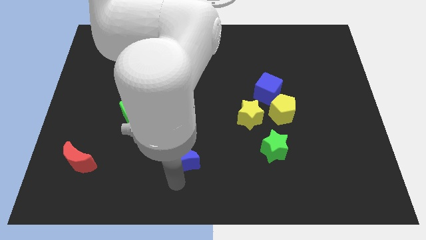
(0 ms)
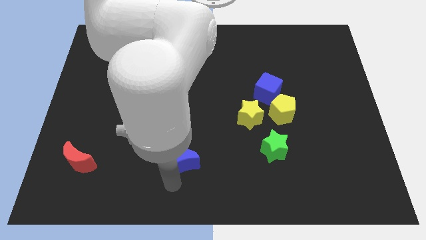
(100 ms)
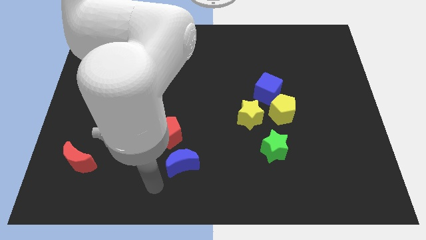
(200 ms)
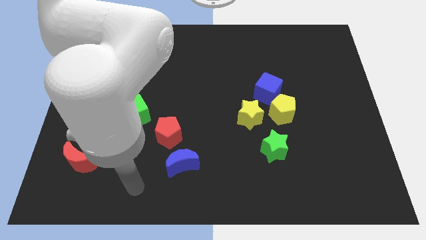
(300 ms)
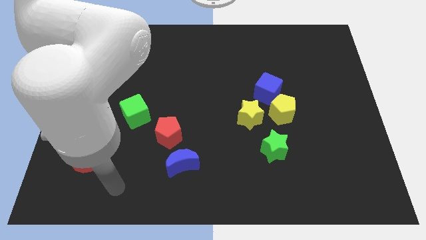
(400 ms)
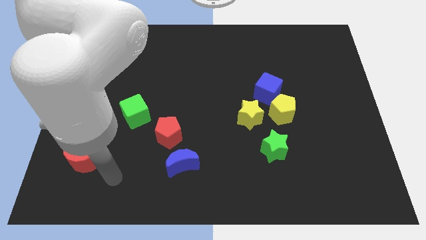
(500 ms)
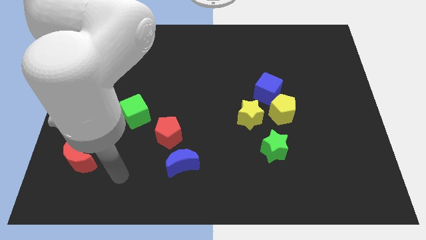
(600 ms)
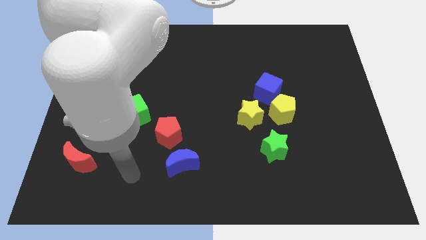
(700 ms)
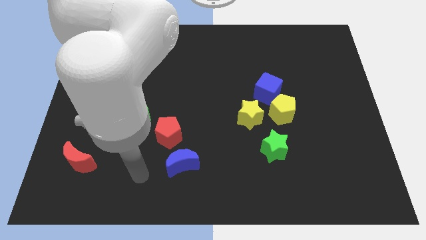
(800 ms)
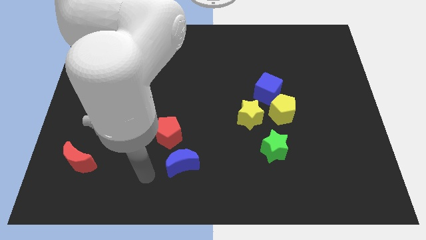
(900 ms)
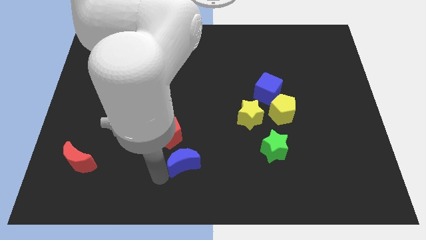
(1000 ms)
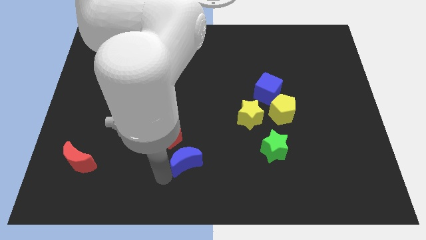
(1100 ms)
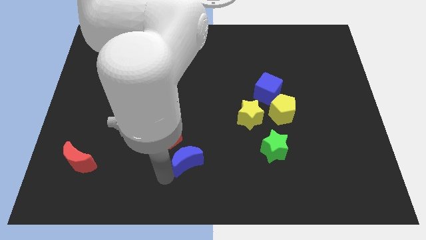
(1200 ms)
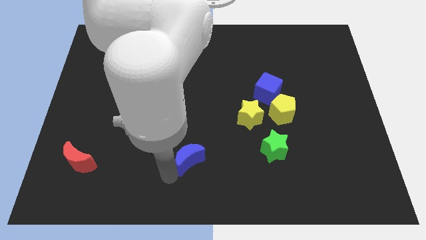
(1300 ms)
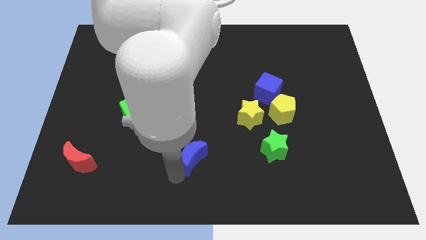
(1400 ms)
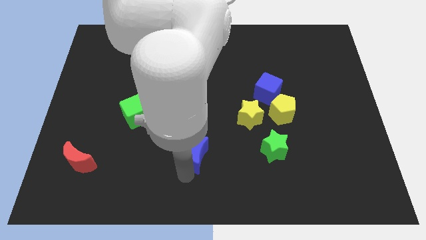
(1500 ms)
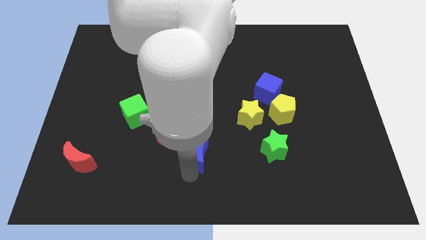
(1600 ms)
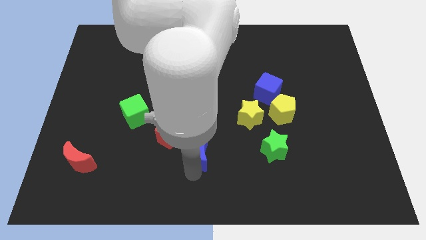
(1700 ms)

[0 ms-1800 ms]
slightly push the blue crescent to the right of the board

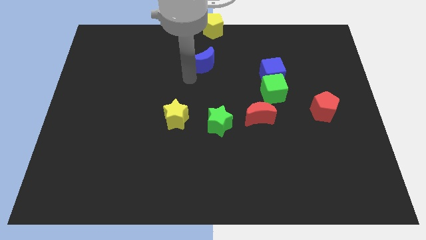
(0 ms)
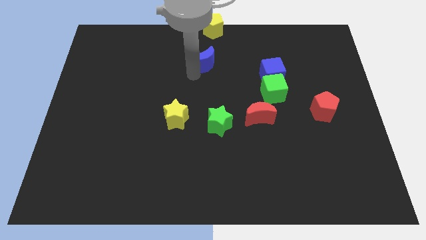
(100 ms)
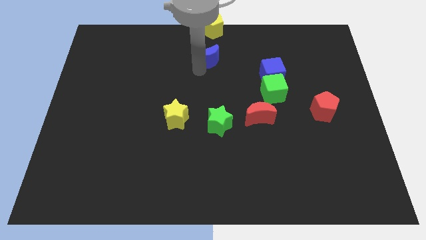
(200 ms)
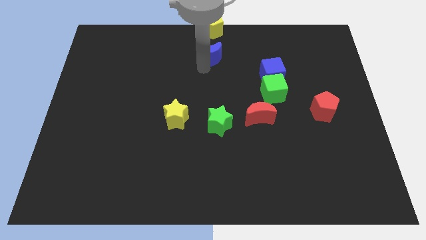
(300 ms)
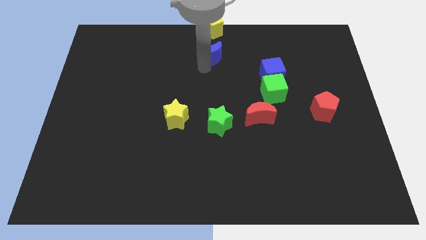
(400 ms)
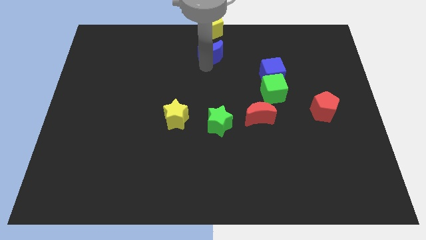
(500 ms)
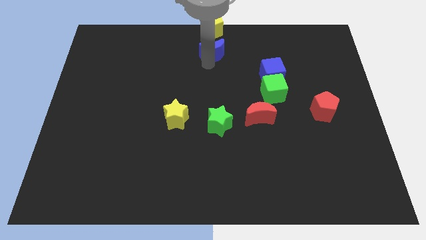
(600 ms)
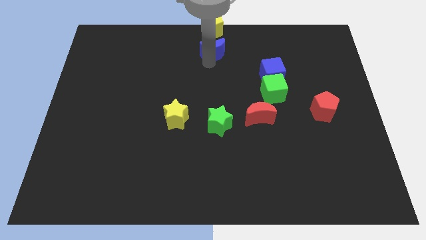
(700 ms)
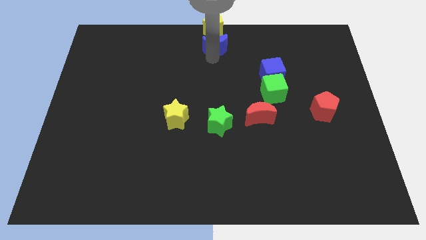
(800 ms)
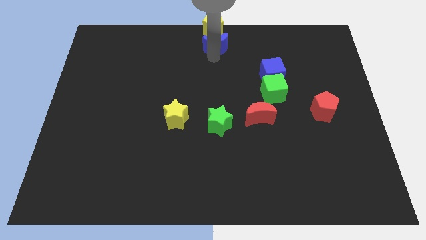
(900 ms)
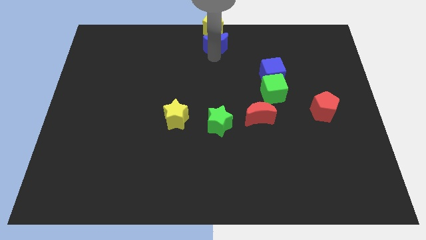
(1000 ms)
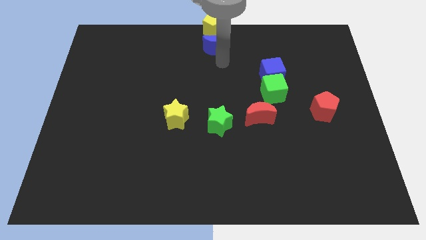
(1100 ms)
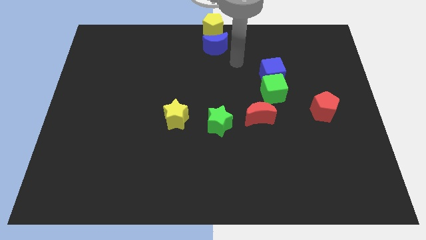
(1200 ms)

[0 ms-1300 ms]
move the blue crescent towards the bottom of the yellow pentagon

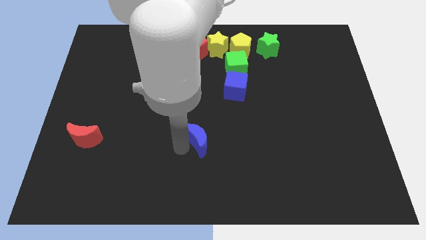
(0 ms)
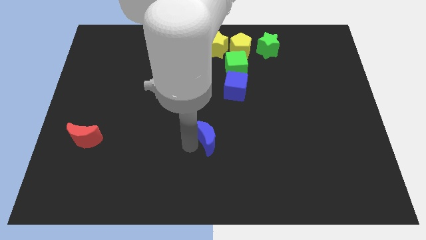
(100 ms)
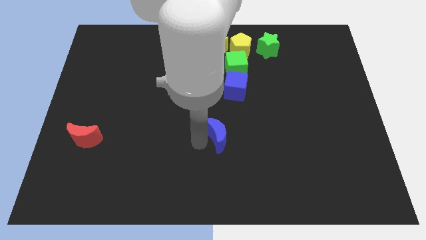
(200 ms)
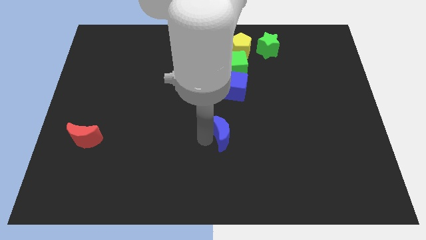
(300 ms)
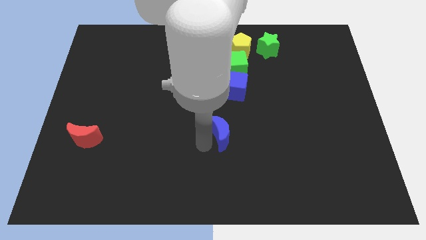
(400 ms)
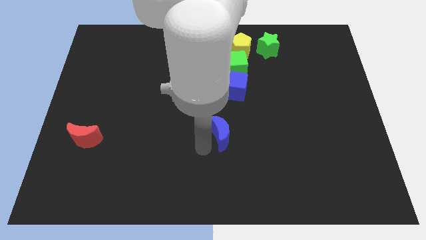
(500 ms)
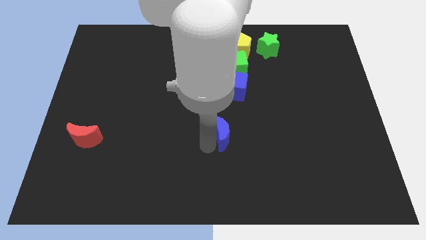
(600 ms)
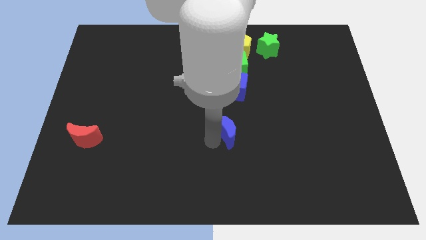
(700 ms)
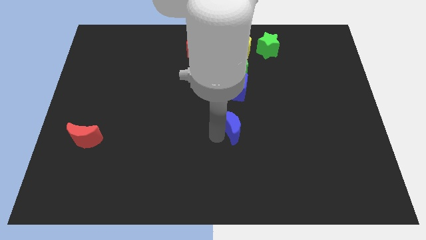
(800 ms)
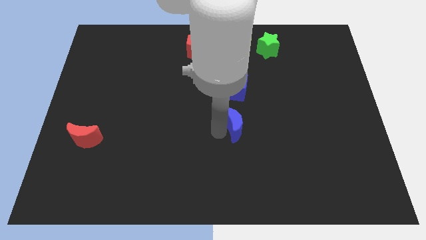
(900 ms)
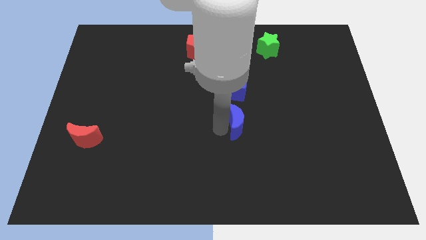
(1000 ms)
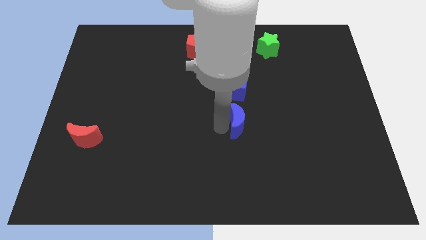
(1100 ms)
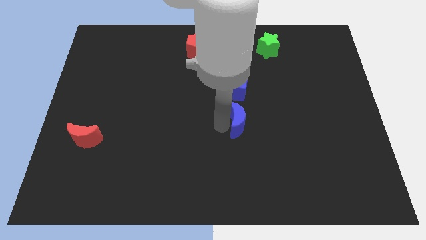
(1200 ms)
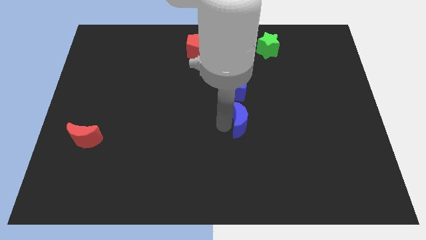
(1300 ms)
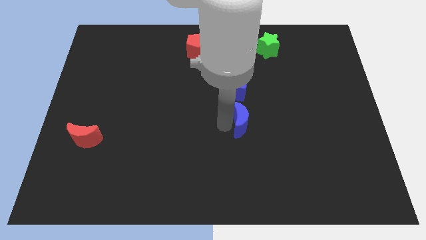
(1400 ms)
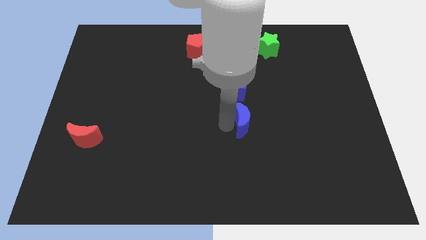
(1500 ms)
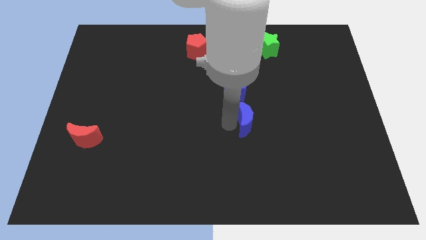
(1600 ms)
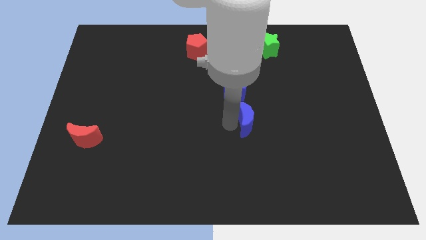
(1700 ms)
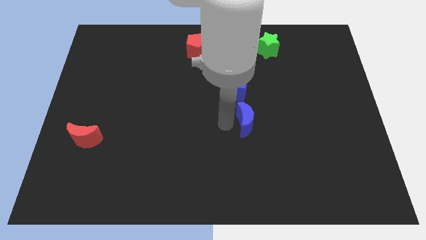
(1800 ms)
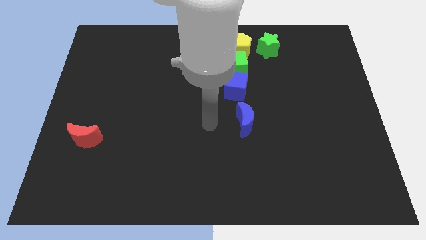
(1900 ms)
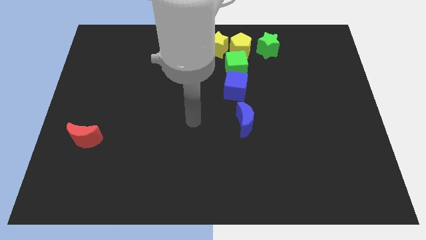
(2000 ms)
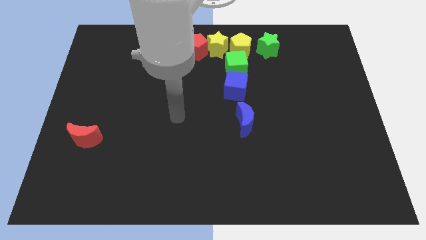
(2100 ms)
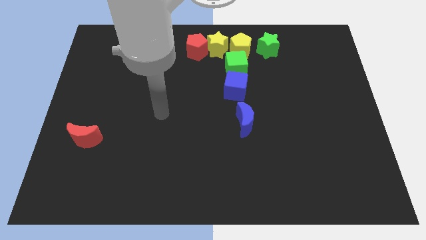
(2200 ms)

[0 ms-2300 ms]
move the blue crescent in line with the blue cube

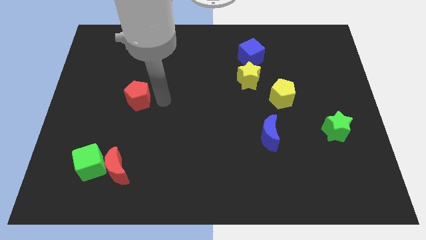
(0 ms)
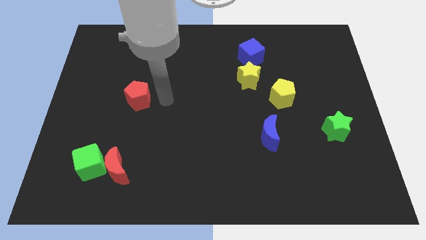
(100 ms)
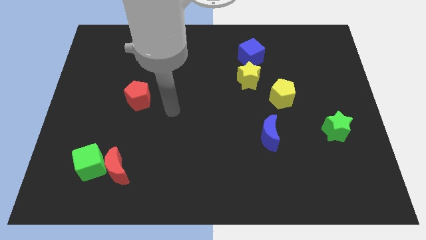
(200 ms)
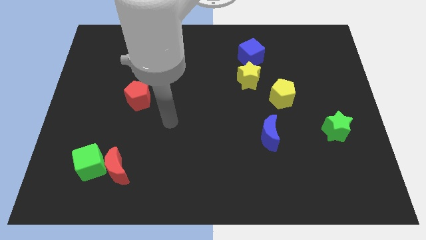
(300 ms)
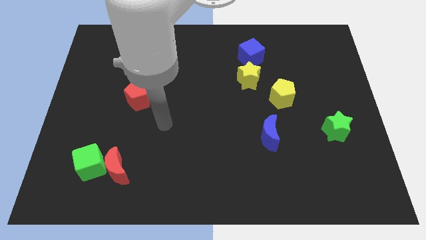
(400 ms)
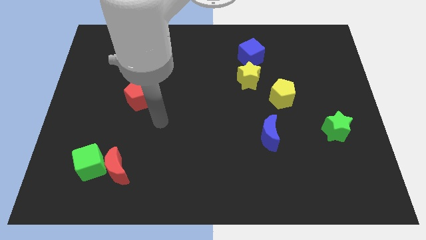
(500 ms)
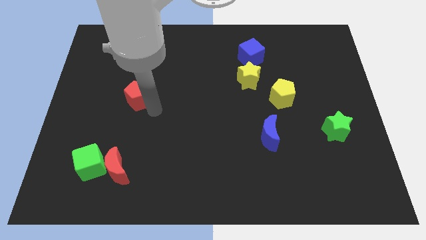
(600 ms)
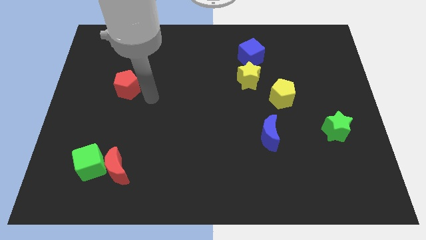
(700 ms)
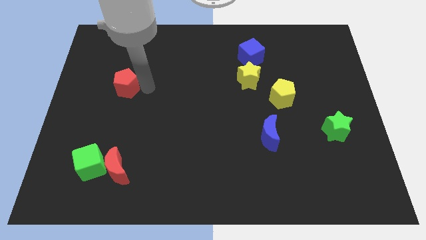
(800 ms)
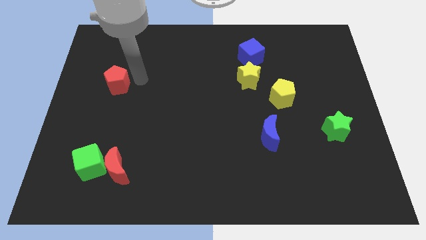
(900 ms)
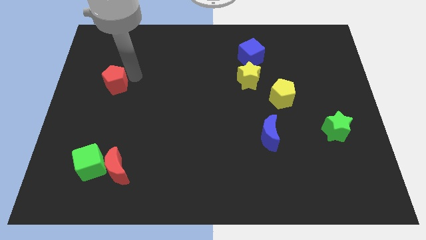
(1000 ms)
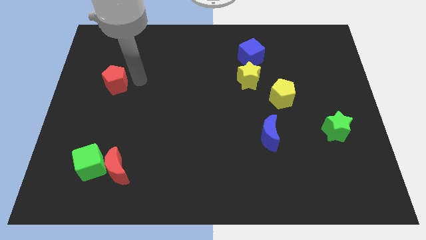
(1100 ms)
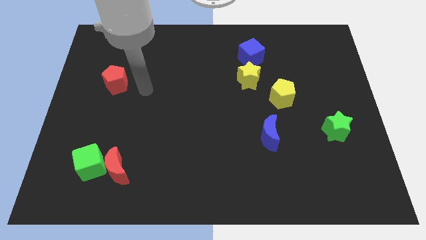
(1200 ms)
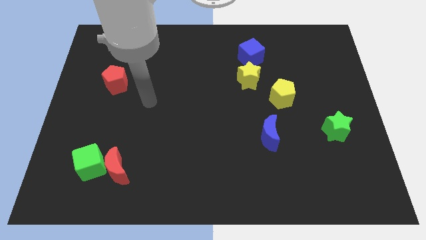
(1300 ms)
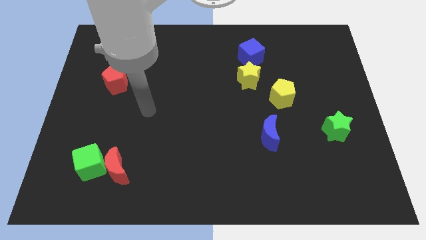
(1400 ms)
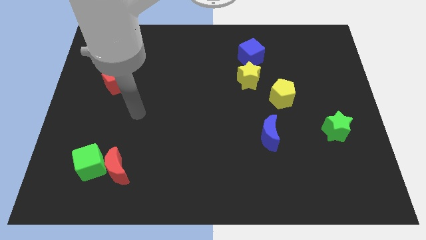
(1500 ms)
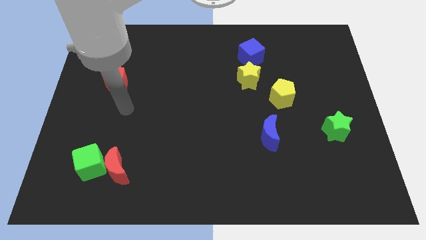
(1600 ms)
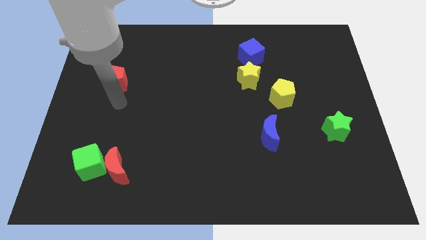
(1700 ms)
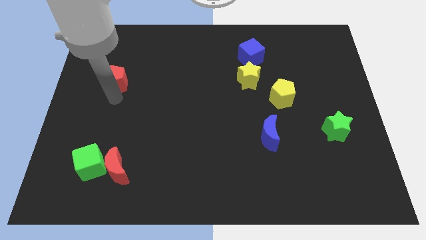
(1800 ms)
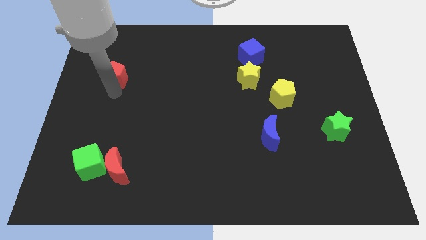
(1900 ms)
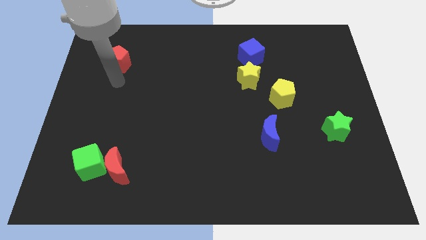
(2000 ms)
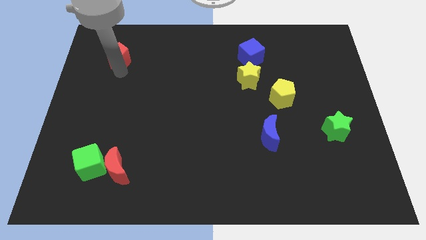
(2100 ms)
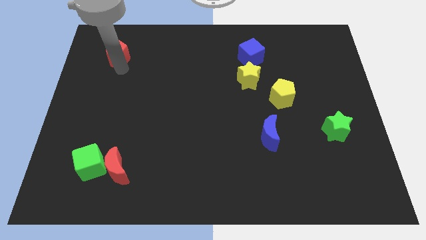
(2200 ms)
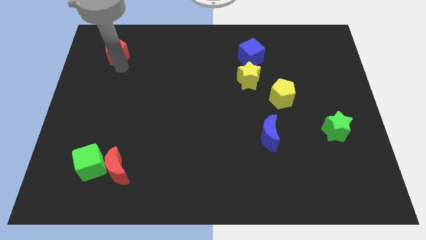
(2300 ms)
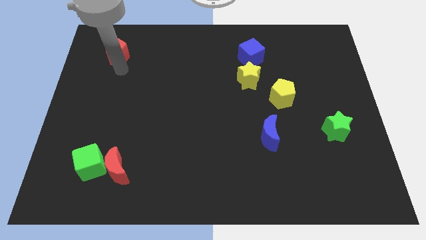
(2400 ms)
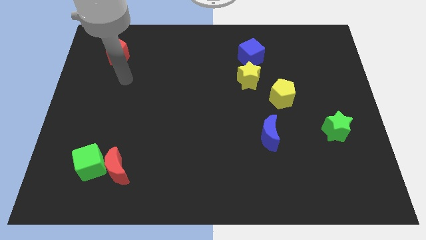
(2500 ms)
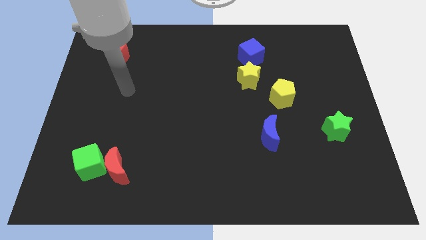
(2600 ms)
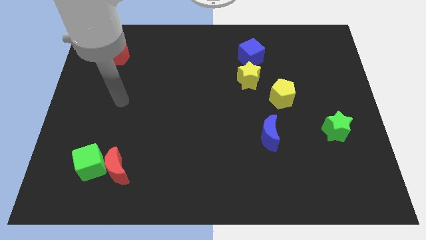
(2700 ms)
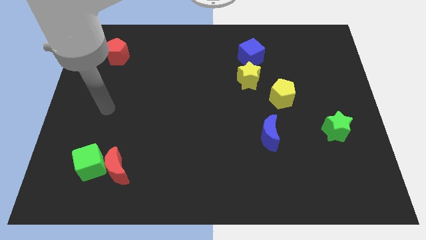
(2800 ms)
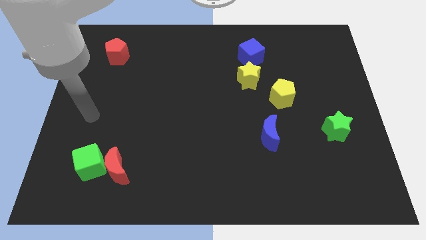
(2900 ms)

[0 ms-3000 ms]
move the red pentagon to the horizontal left side of the blue cube

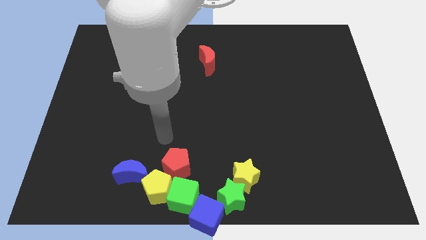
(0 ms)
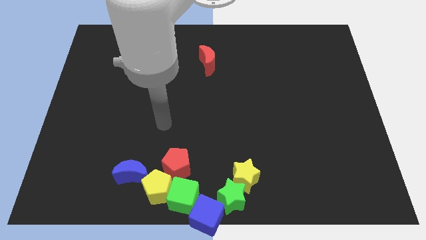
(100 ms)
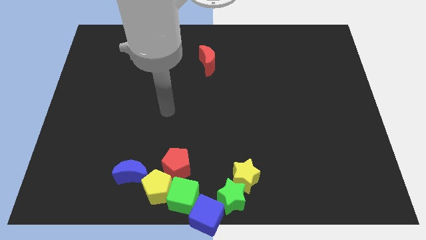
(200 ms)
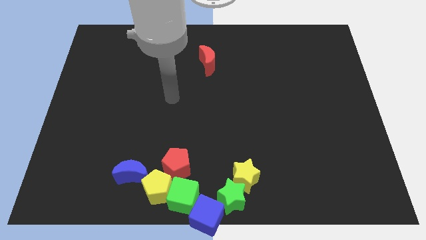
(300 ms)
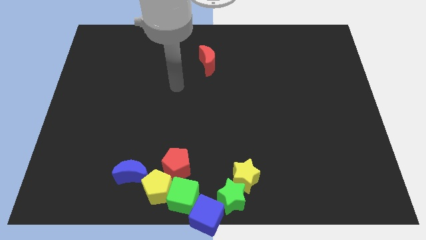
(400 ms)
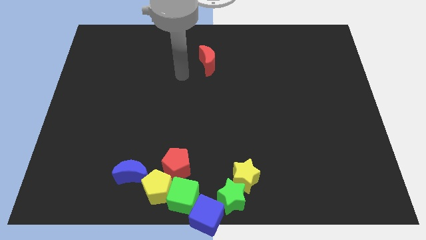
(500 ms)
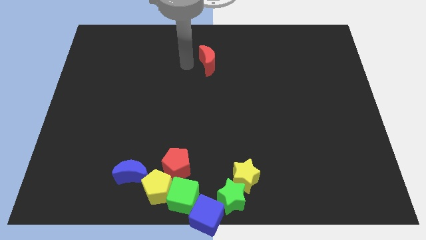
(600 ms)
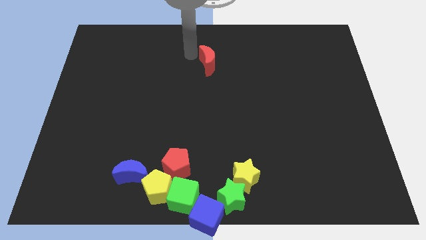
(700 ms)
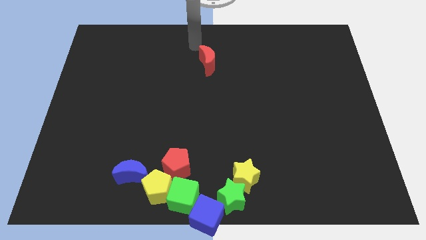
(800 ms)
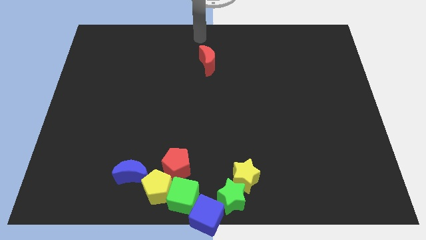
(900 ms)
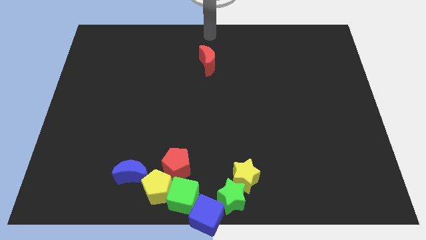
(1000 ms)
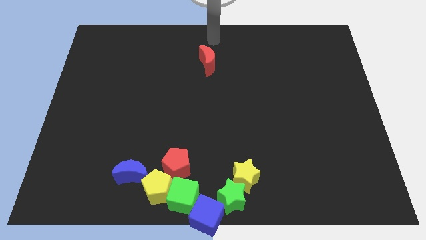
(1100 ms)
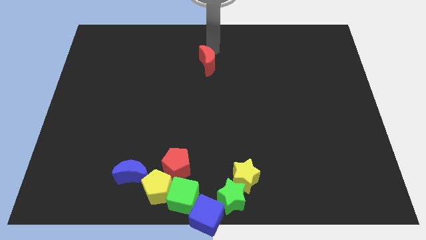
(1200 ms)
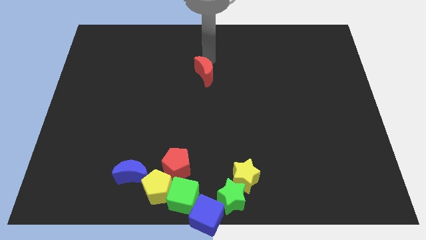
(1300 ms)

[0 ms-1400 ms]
move your arm to the top side of the red moon
